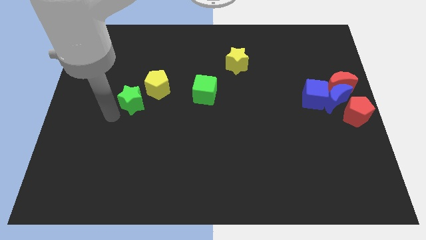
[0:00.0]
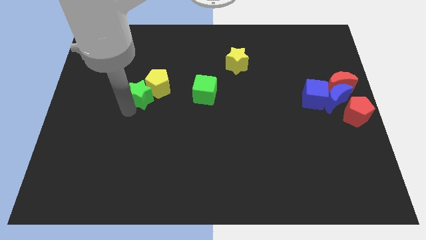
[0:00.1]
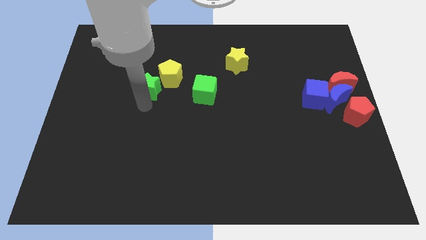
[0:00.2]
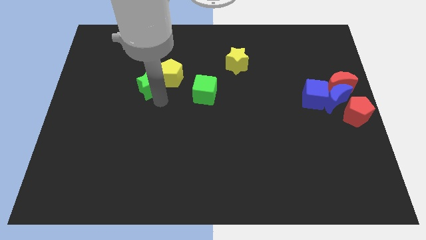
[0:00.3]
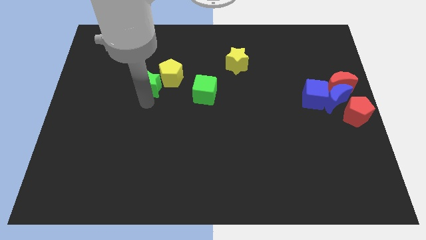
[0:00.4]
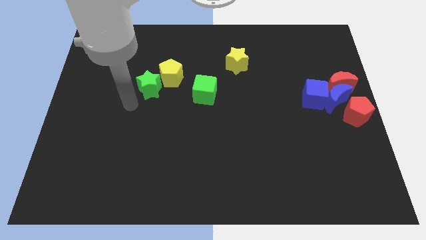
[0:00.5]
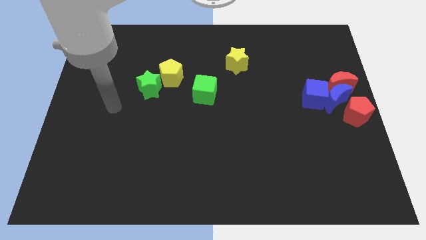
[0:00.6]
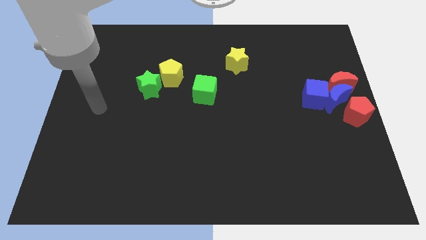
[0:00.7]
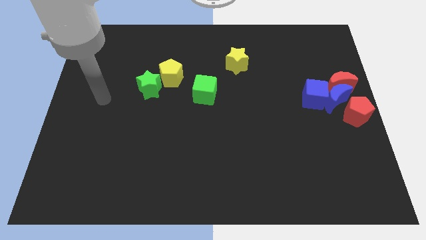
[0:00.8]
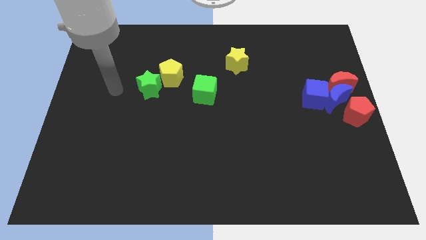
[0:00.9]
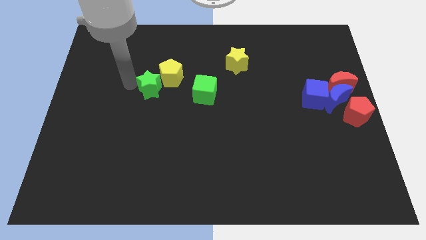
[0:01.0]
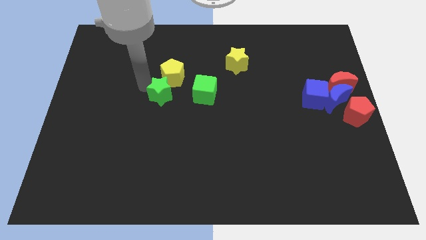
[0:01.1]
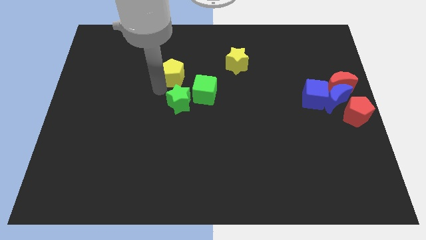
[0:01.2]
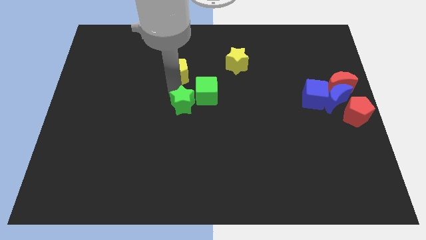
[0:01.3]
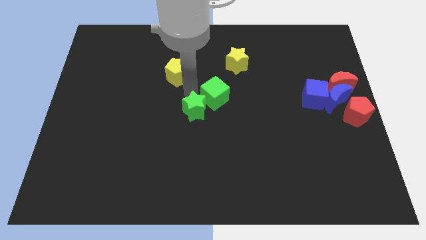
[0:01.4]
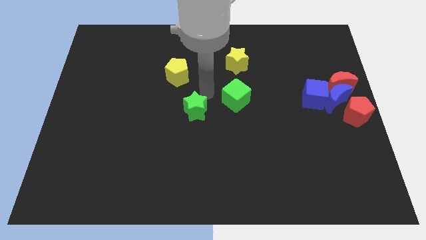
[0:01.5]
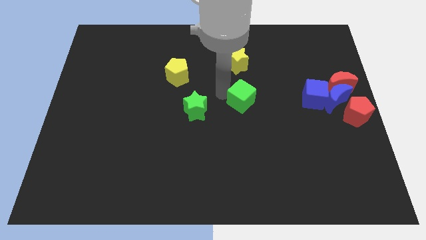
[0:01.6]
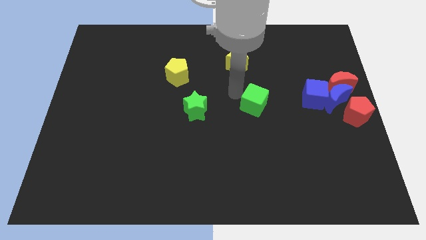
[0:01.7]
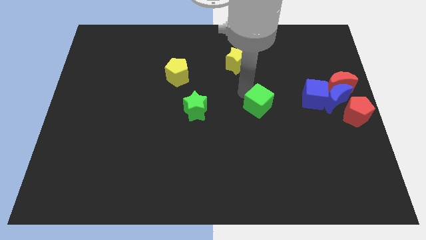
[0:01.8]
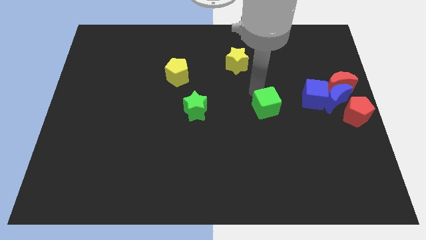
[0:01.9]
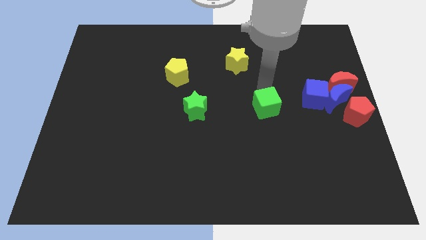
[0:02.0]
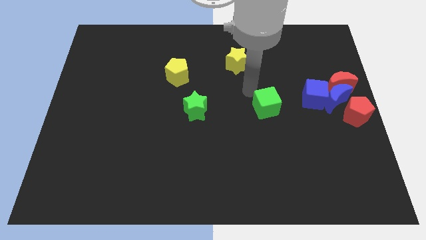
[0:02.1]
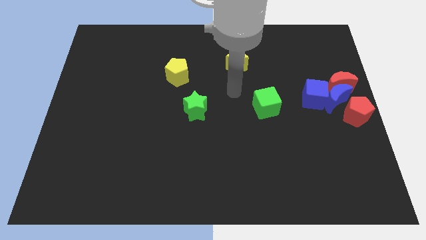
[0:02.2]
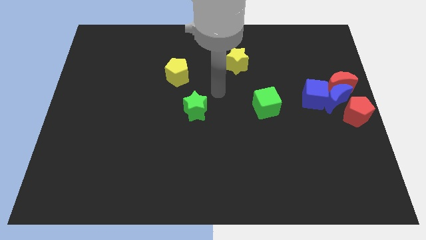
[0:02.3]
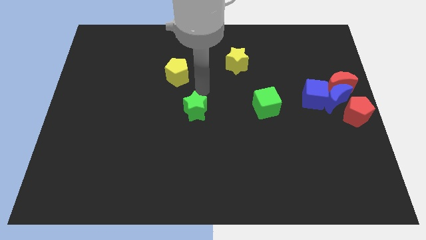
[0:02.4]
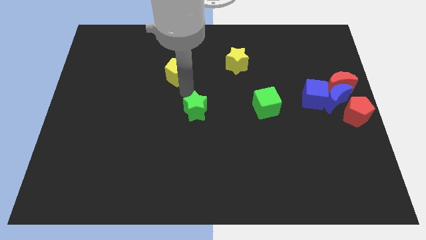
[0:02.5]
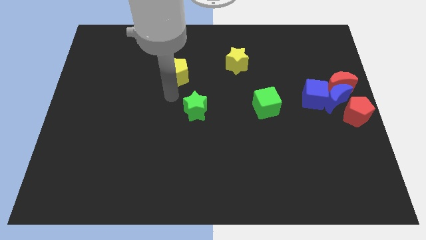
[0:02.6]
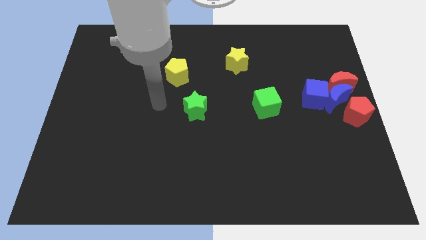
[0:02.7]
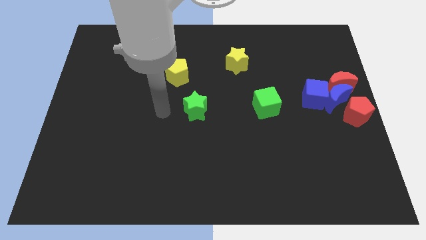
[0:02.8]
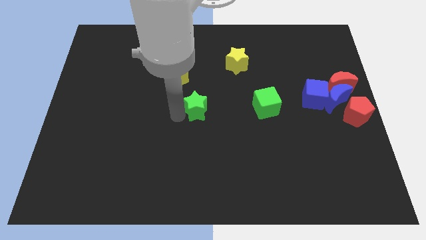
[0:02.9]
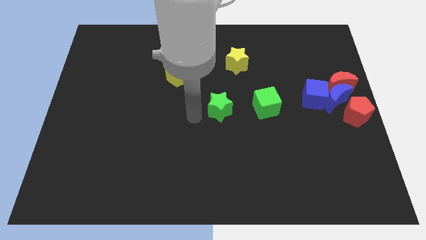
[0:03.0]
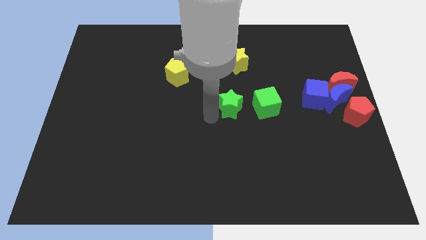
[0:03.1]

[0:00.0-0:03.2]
separate green cube away fro the green star

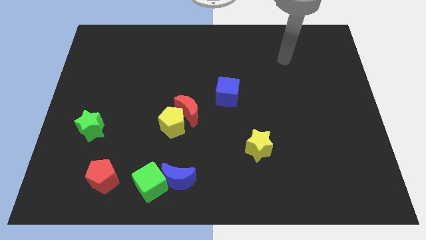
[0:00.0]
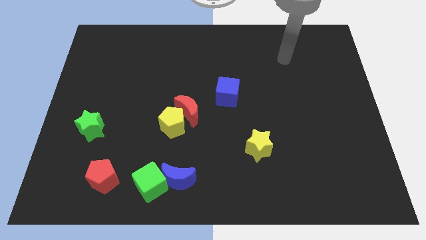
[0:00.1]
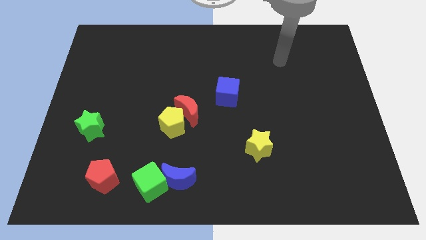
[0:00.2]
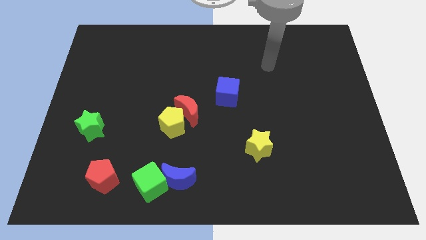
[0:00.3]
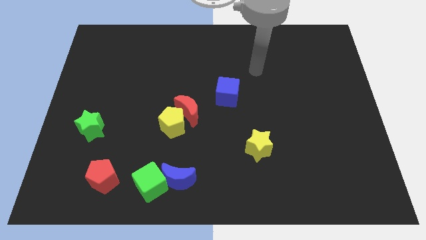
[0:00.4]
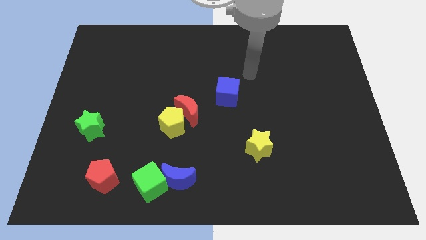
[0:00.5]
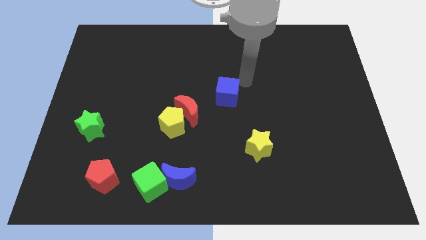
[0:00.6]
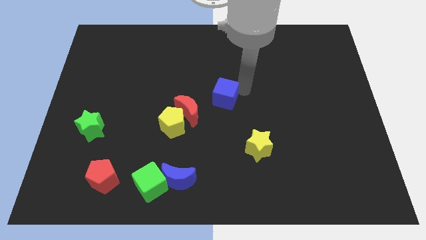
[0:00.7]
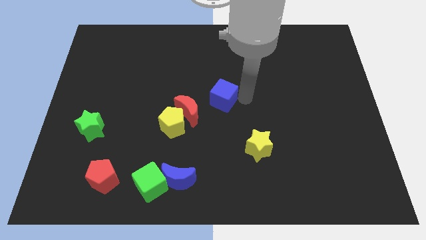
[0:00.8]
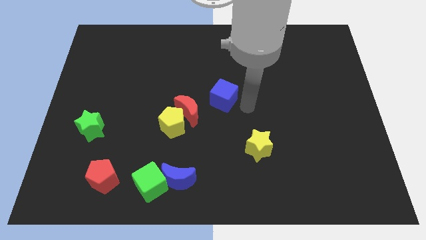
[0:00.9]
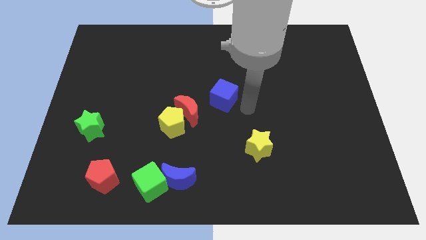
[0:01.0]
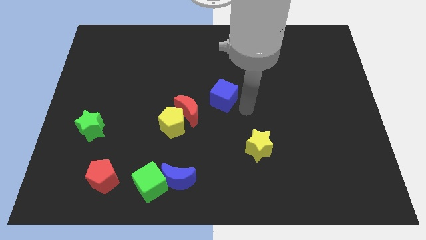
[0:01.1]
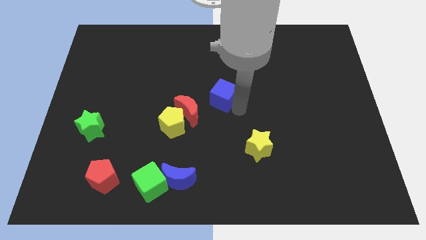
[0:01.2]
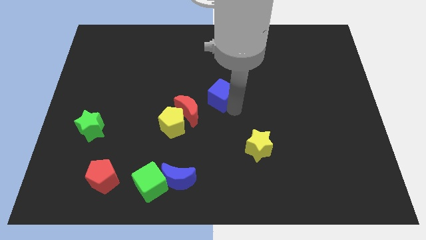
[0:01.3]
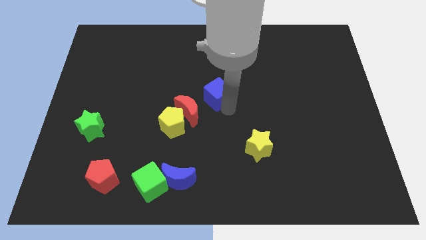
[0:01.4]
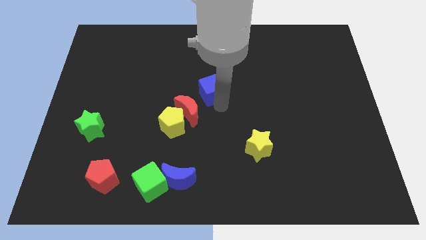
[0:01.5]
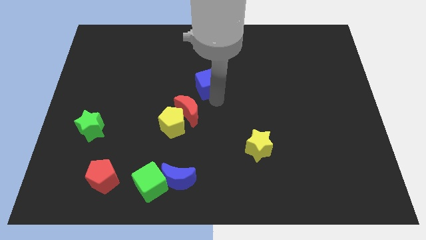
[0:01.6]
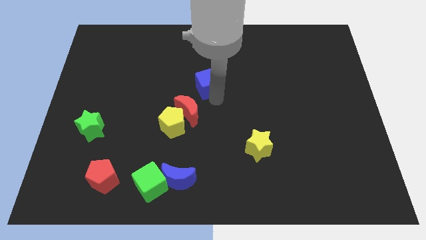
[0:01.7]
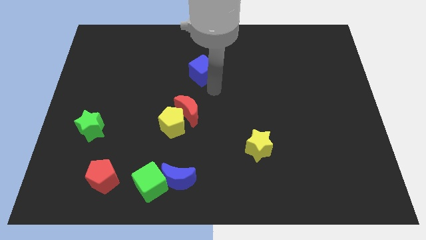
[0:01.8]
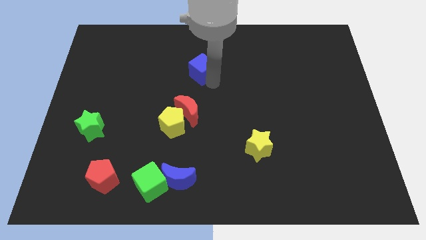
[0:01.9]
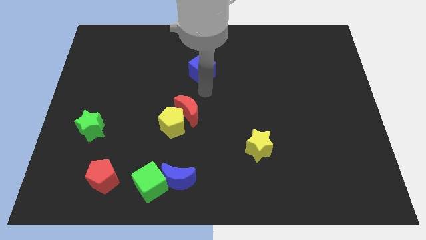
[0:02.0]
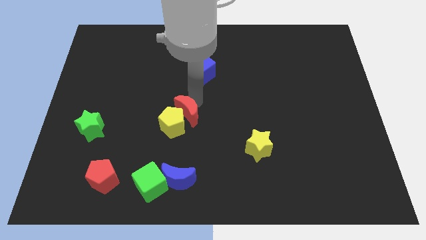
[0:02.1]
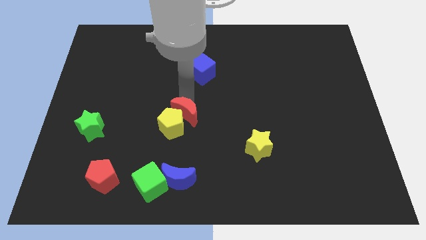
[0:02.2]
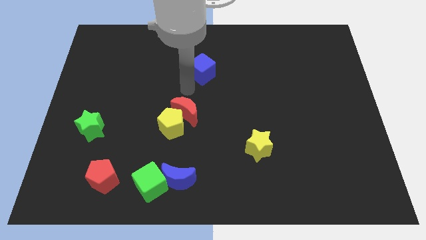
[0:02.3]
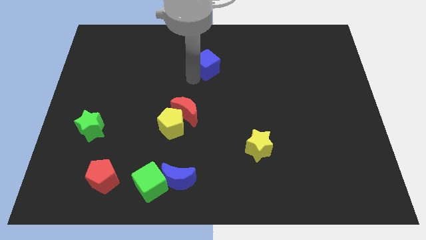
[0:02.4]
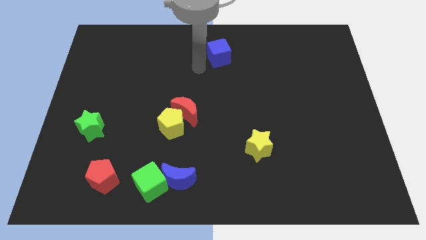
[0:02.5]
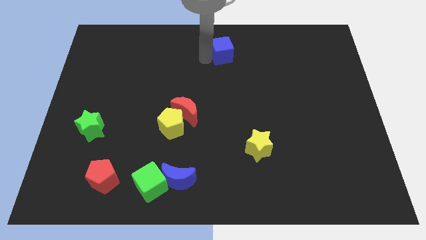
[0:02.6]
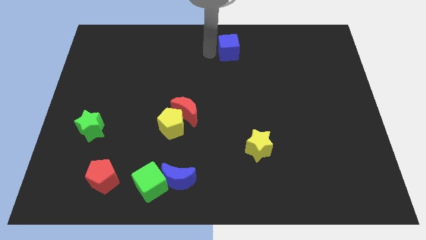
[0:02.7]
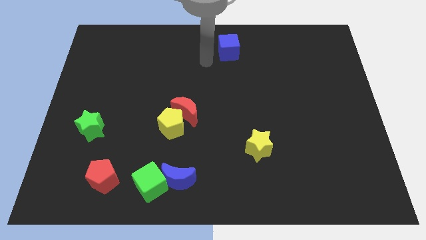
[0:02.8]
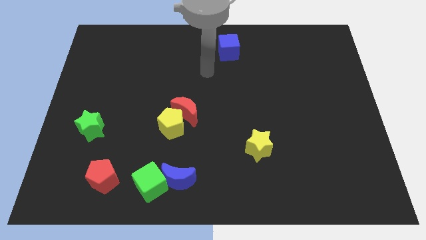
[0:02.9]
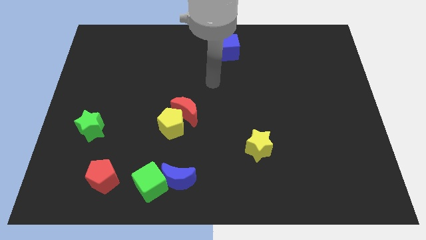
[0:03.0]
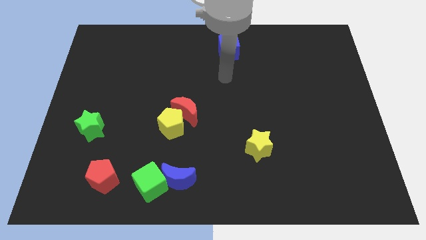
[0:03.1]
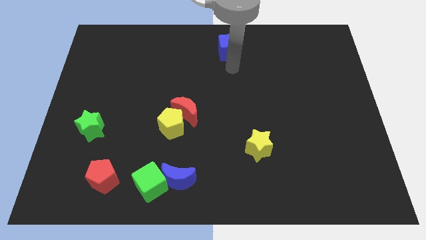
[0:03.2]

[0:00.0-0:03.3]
place the blue cube to the top middle of the board

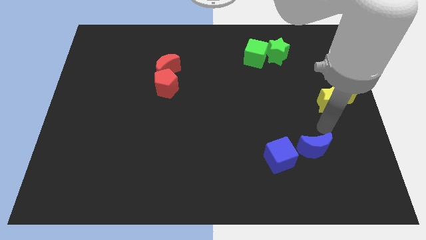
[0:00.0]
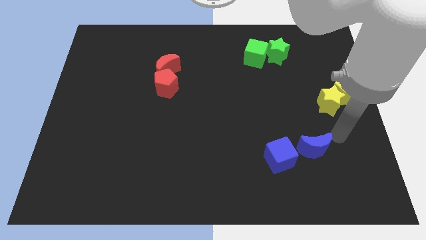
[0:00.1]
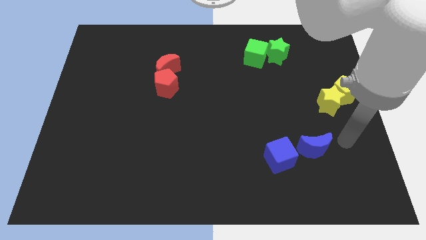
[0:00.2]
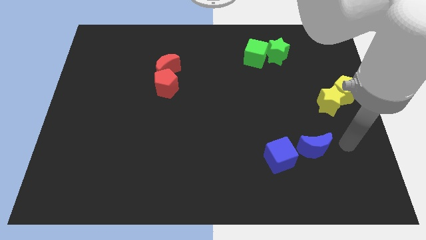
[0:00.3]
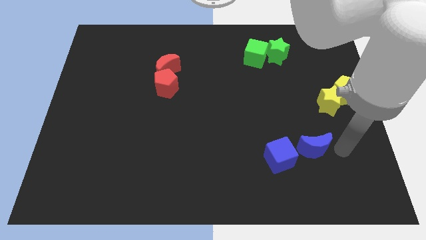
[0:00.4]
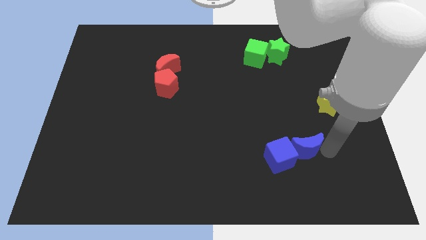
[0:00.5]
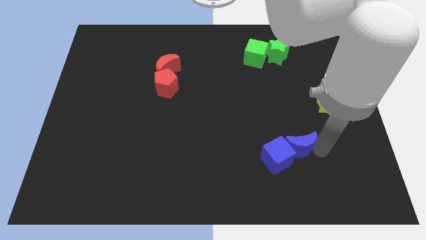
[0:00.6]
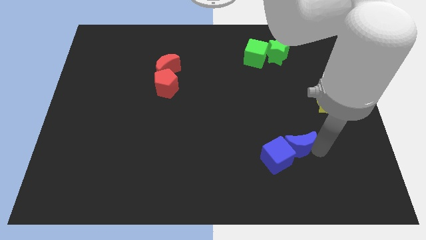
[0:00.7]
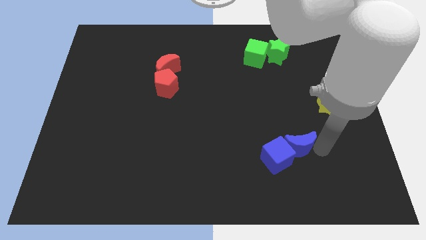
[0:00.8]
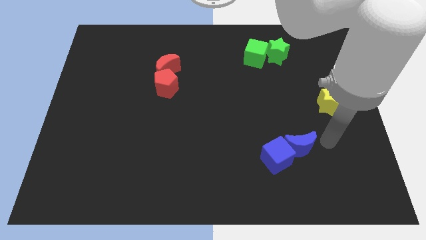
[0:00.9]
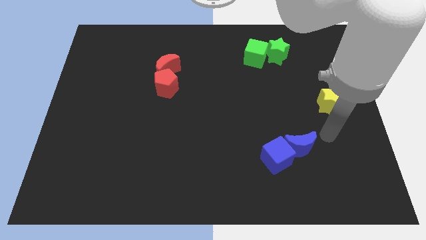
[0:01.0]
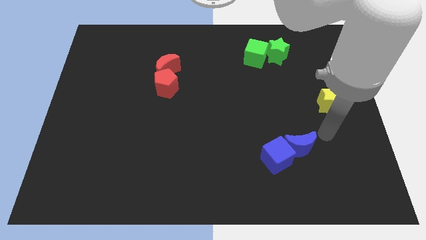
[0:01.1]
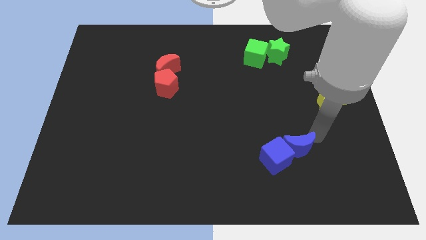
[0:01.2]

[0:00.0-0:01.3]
push the blue crescent toward the blue cube

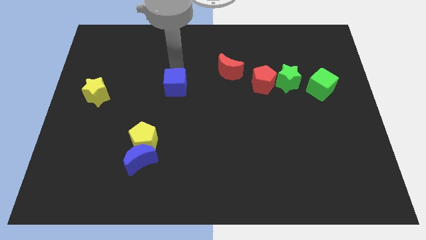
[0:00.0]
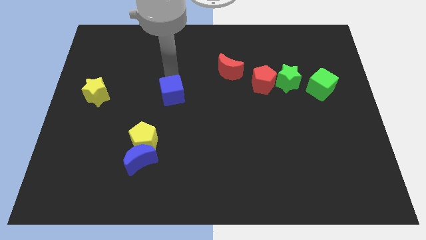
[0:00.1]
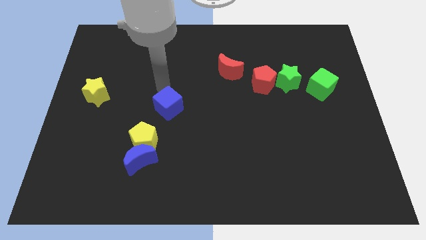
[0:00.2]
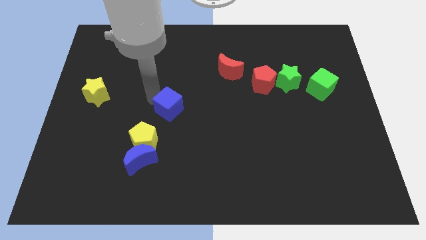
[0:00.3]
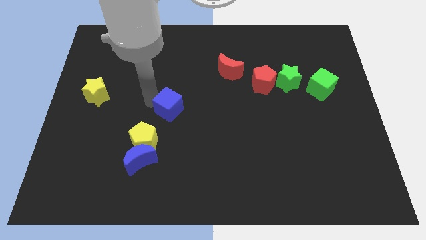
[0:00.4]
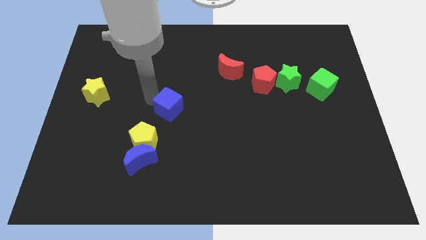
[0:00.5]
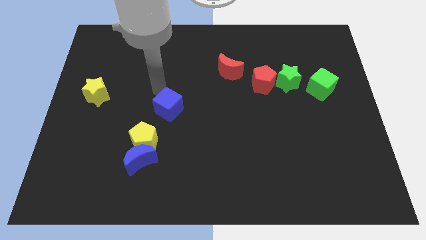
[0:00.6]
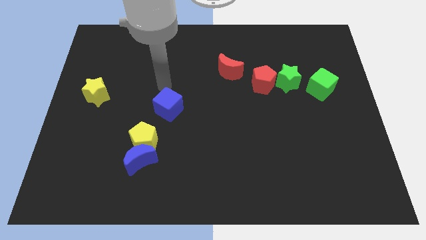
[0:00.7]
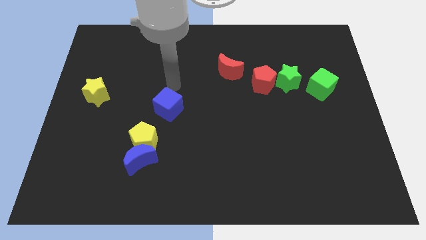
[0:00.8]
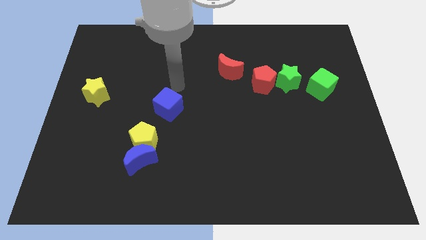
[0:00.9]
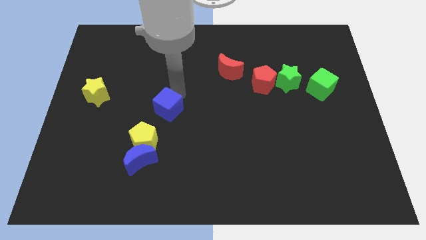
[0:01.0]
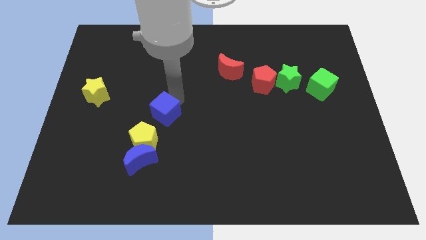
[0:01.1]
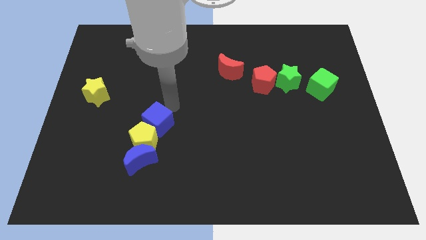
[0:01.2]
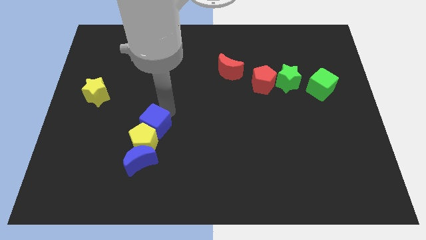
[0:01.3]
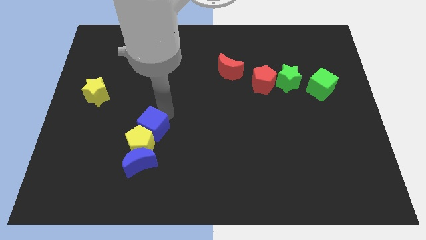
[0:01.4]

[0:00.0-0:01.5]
place the blue cube towards the top side of the yellow pentagon
